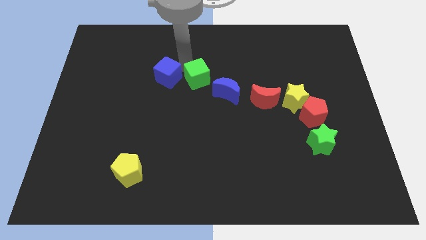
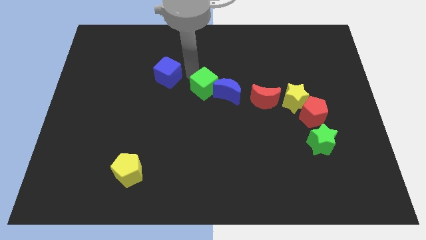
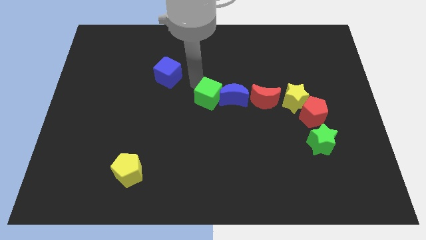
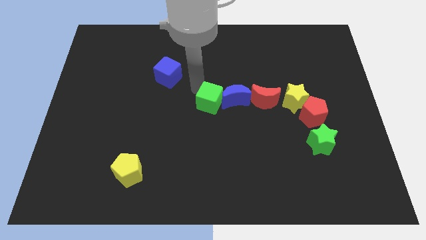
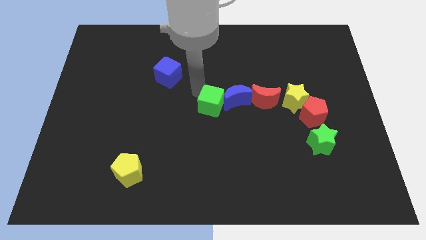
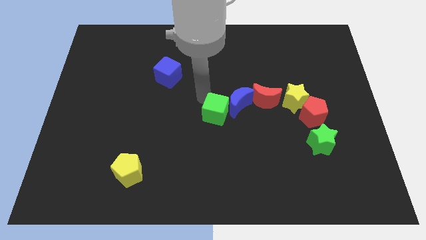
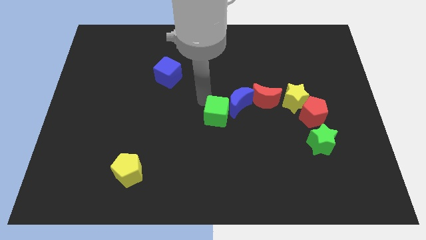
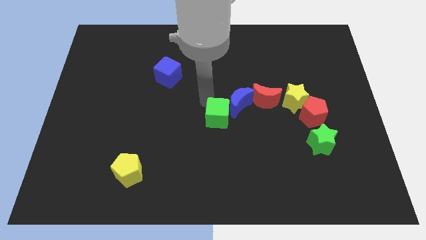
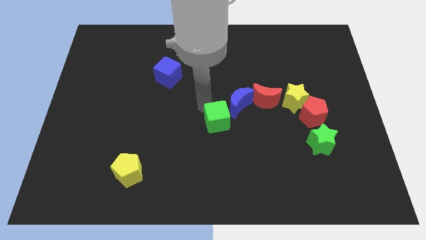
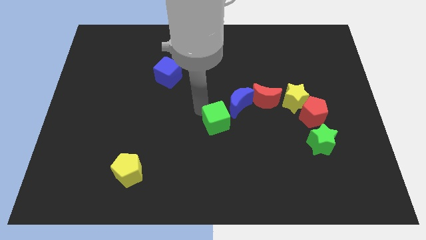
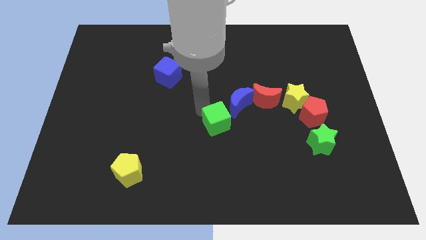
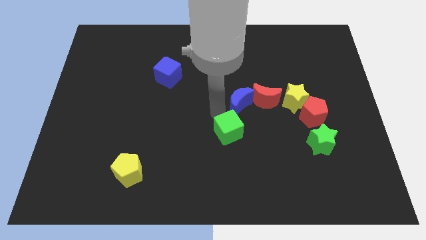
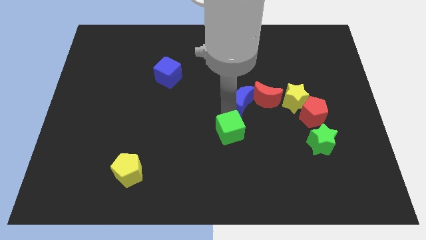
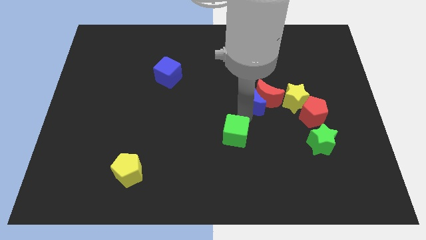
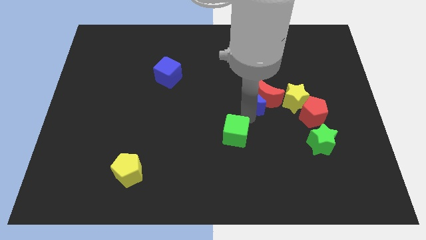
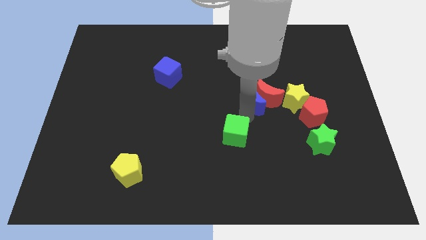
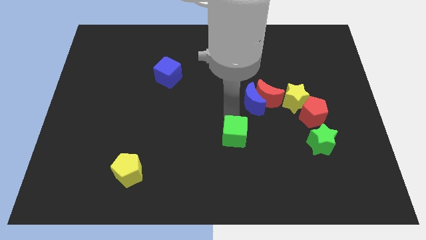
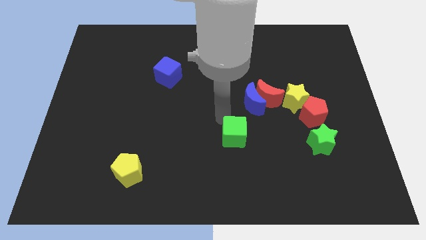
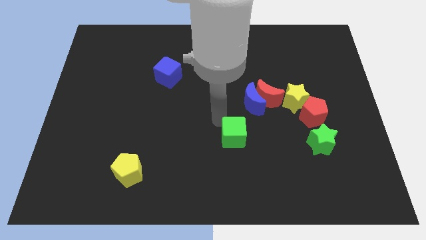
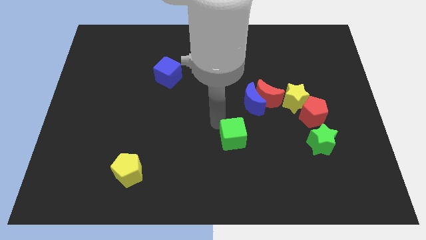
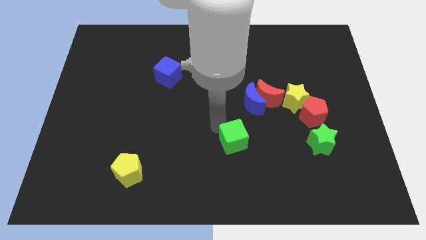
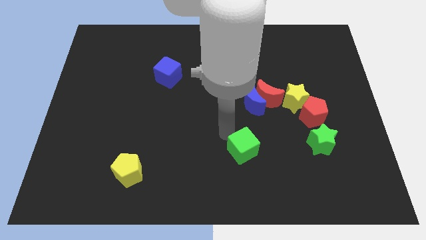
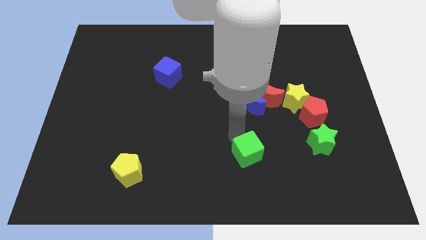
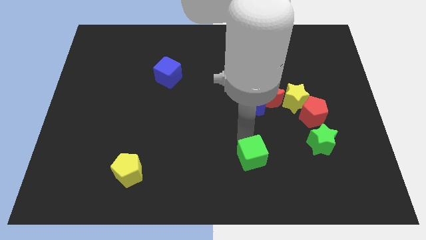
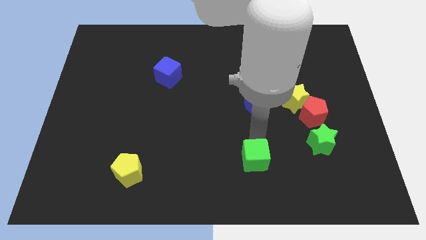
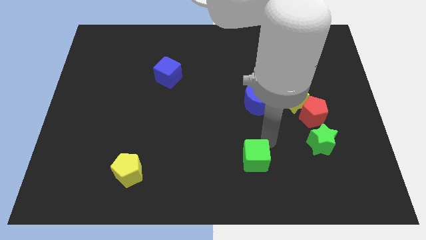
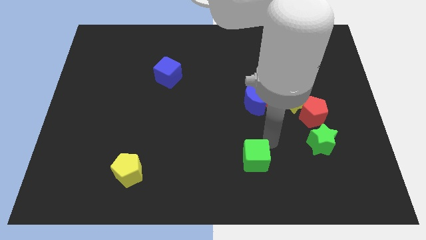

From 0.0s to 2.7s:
push the green cube parallel left to the green star

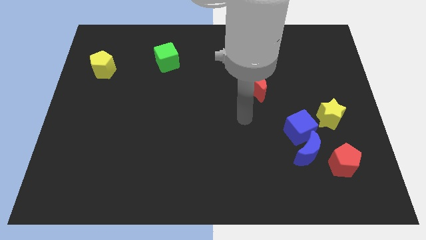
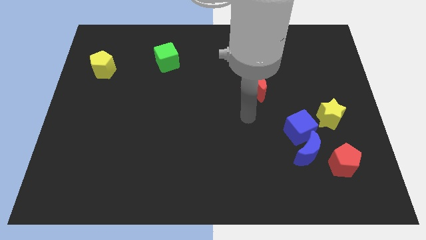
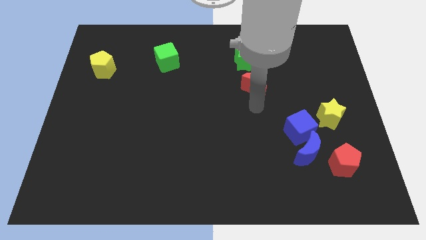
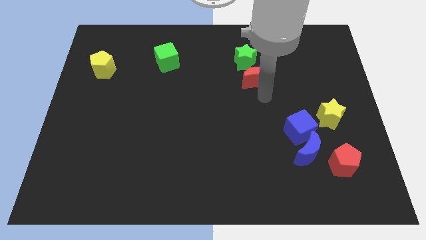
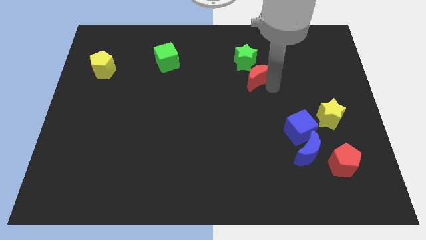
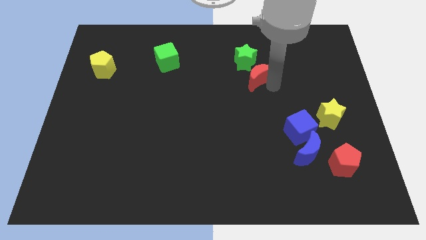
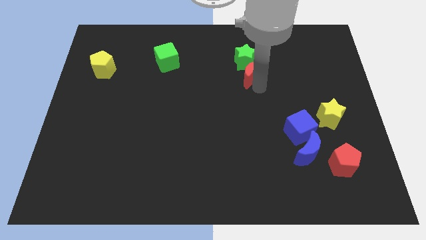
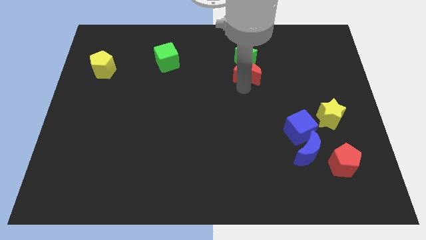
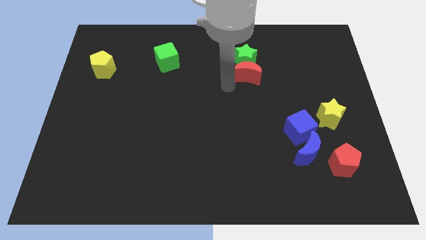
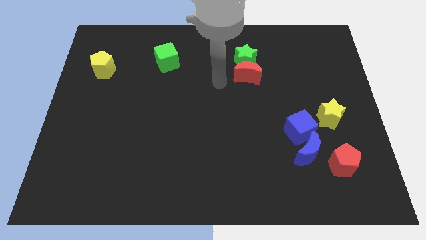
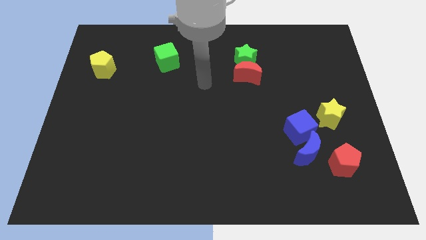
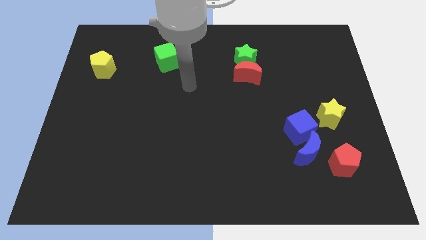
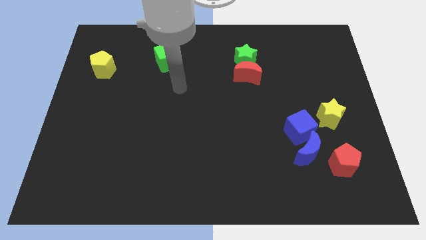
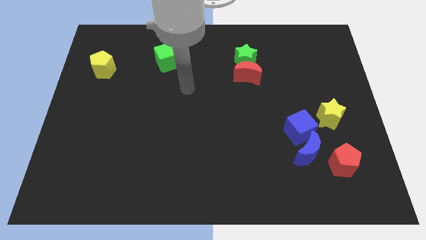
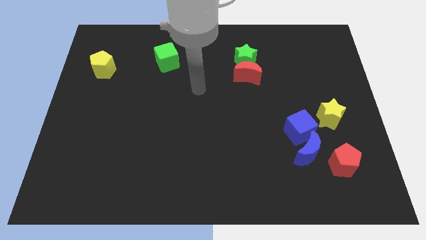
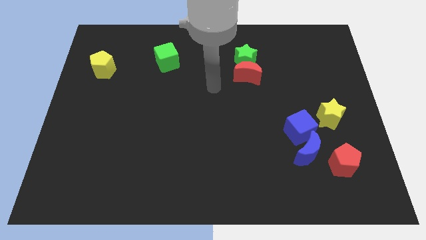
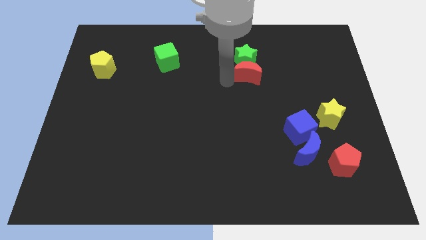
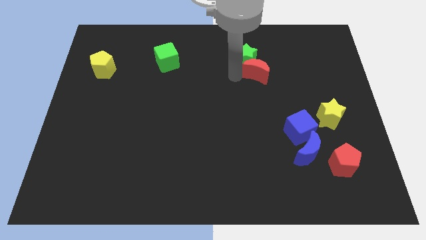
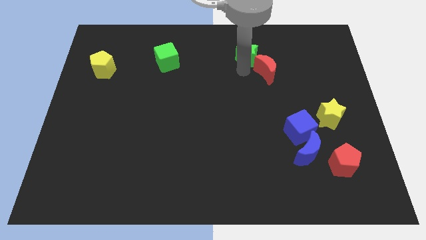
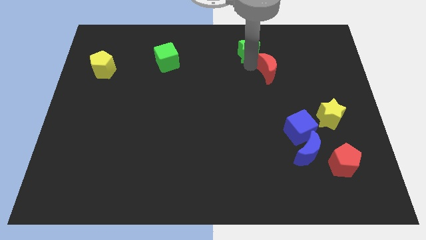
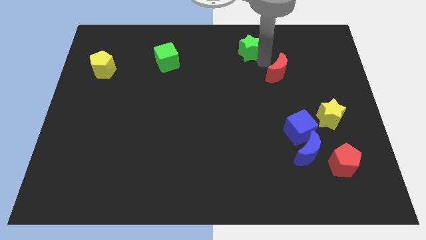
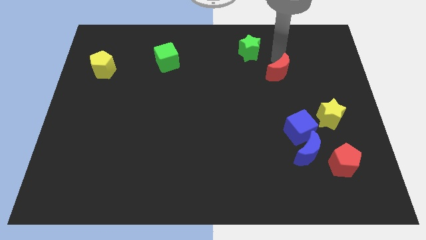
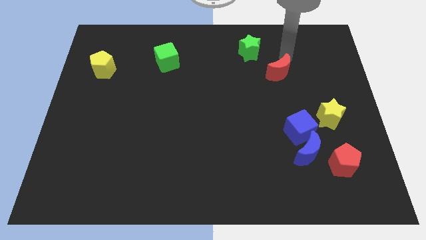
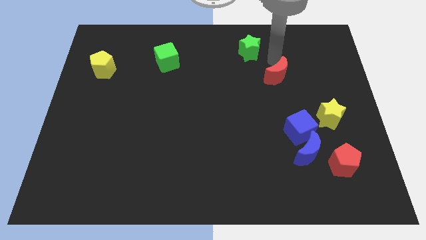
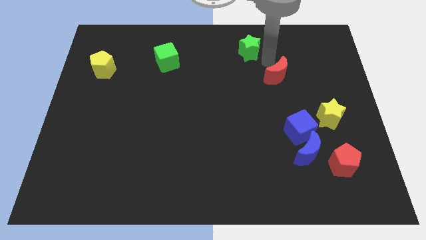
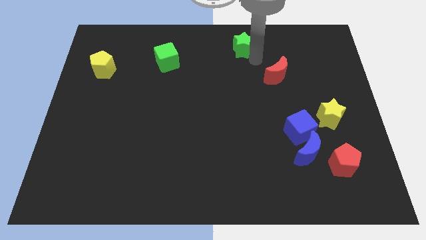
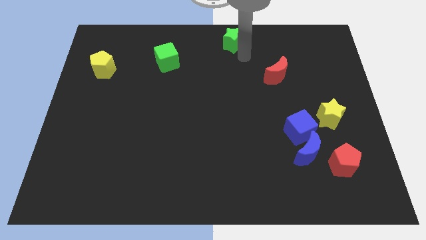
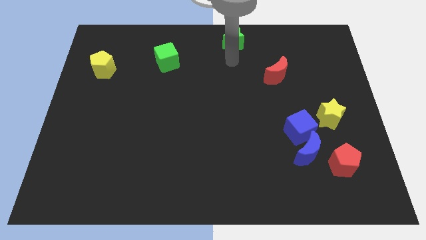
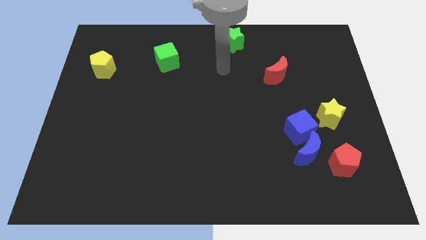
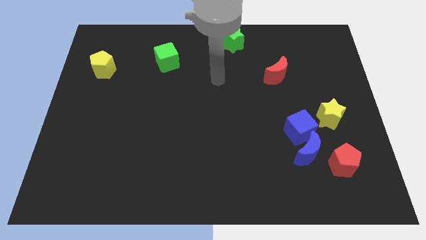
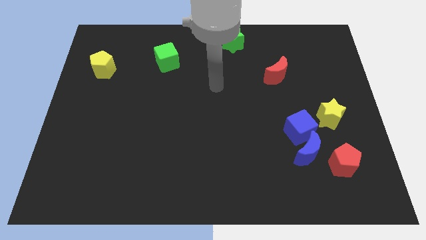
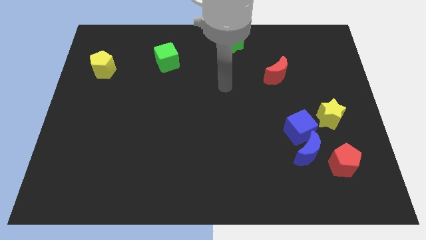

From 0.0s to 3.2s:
move the green star towards the top center of the board

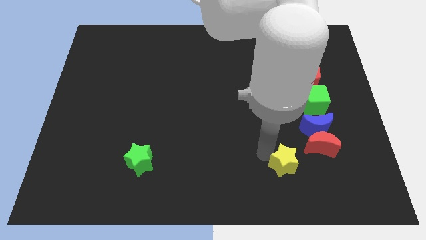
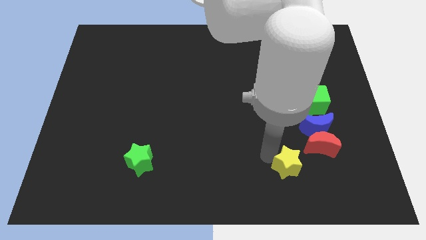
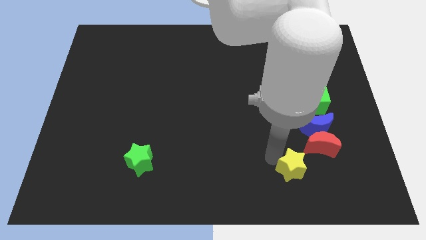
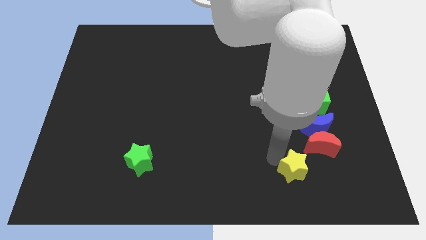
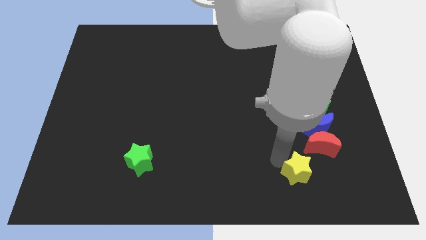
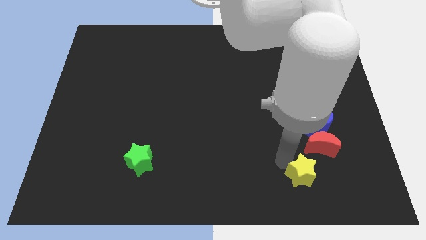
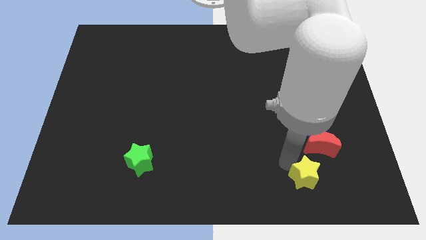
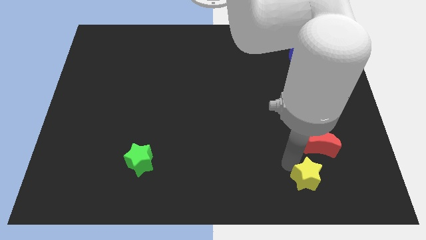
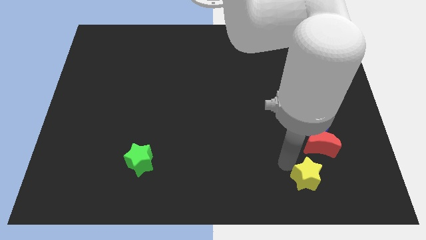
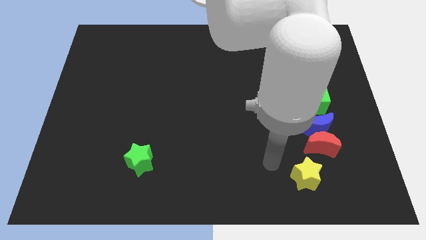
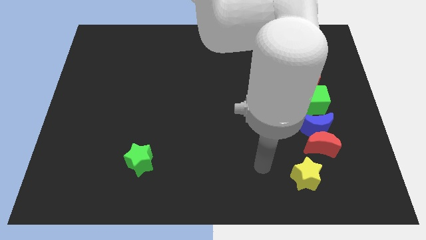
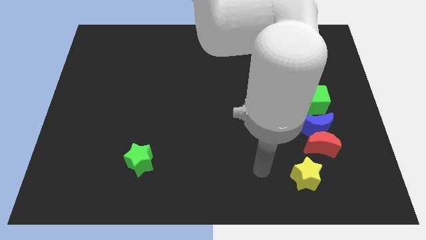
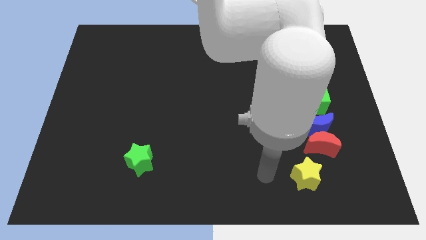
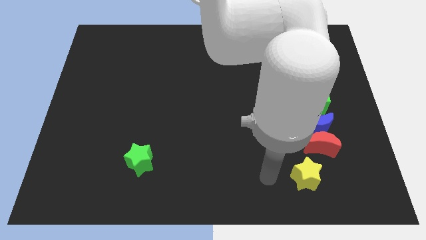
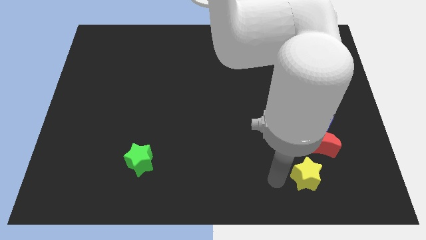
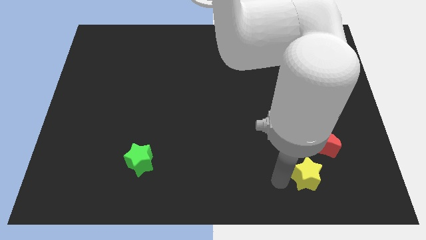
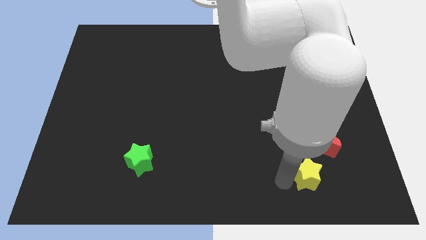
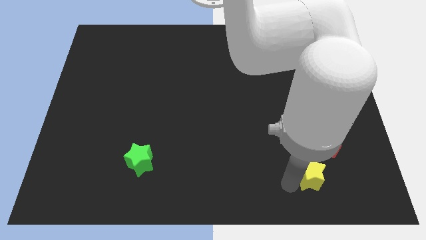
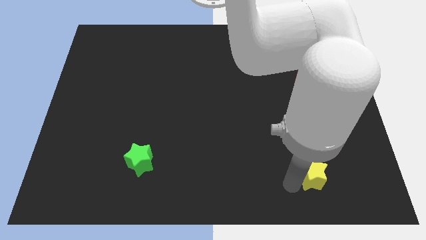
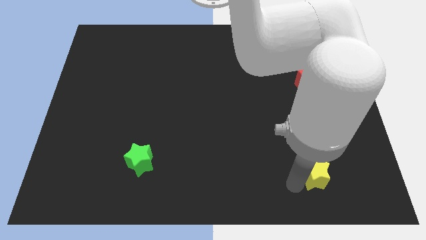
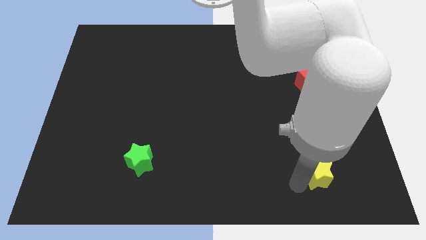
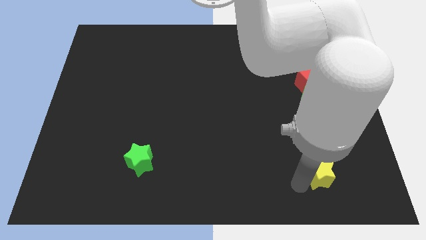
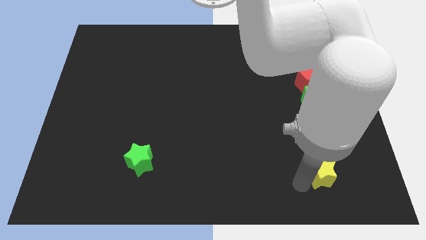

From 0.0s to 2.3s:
drag the yellow star below the red moon

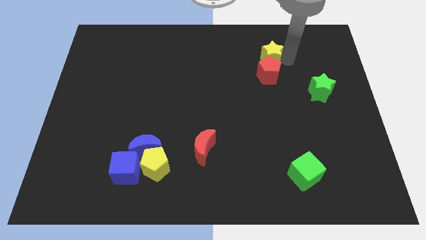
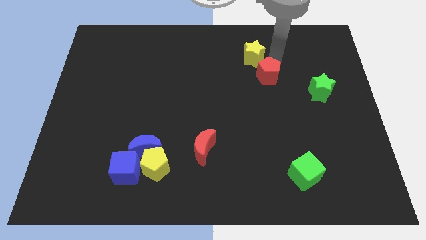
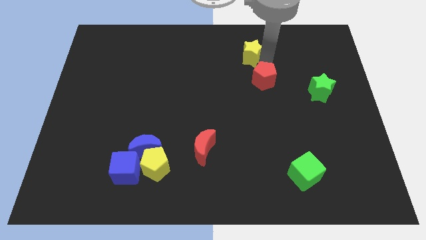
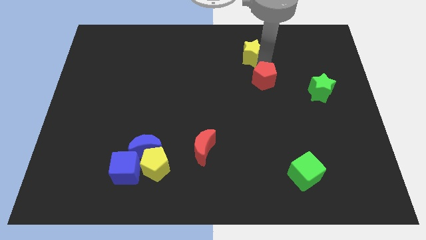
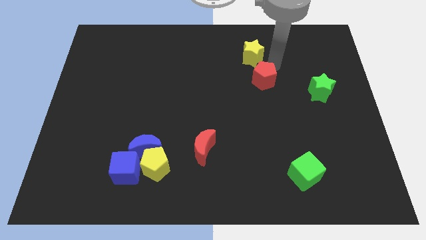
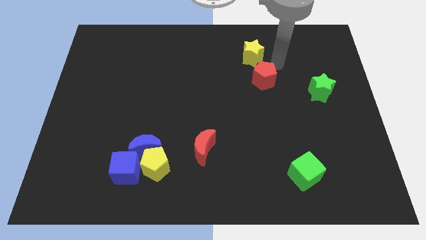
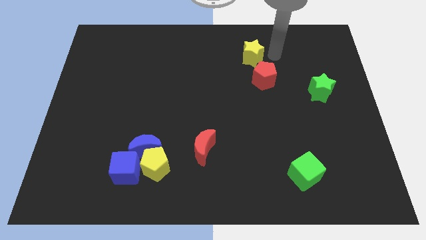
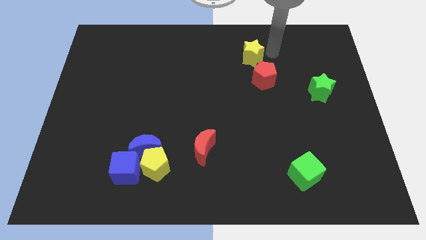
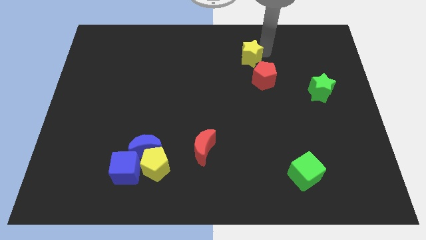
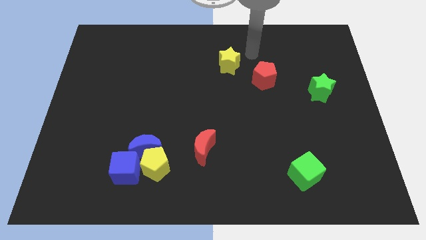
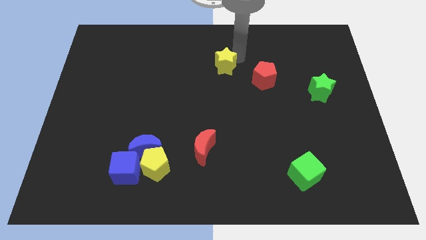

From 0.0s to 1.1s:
separate yellow star from red pentagon
